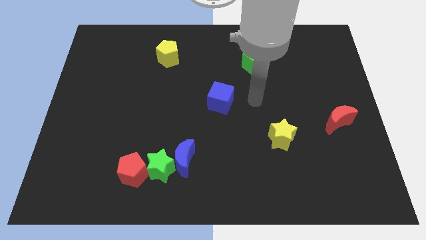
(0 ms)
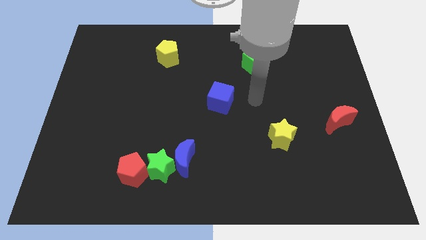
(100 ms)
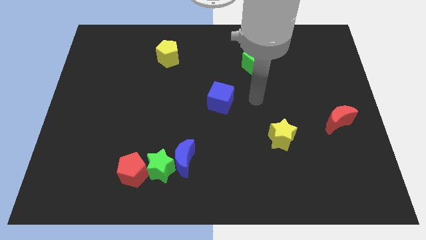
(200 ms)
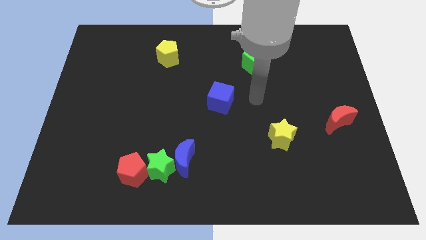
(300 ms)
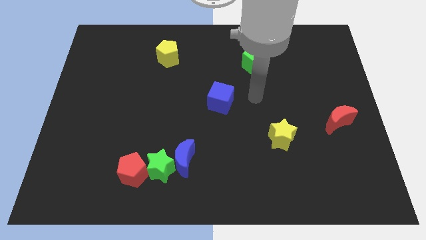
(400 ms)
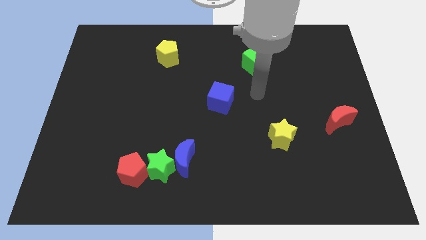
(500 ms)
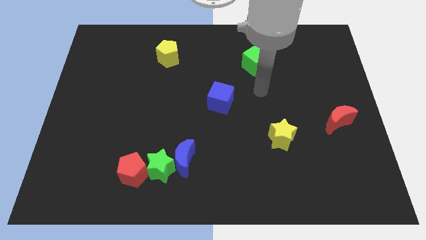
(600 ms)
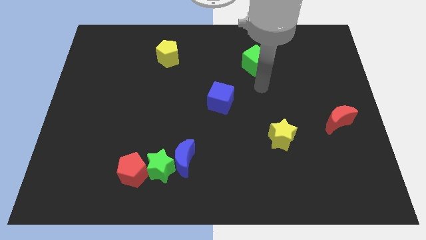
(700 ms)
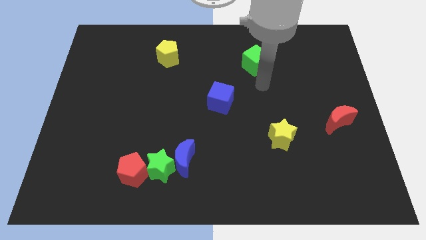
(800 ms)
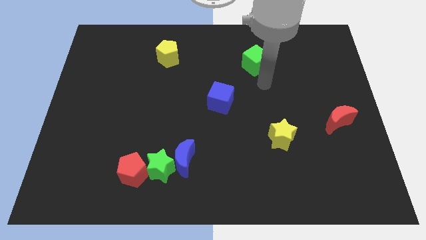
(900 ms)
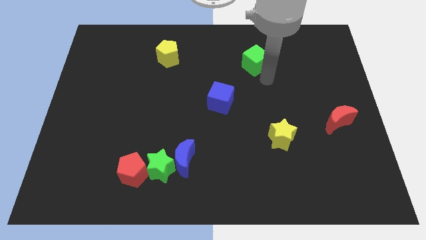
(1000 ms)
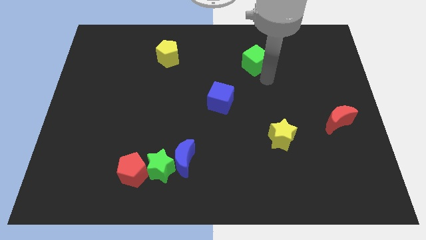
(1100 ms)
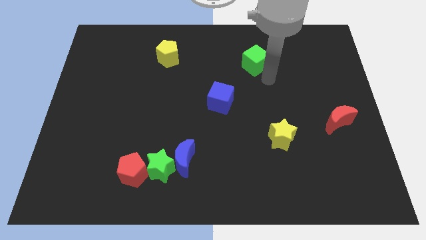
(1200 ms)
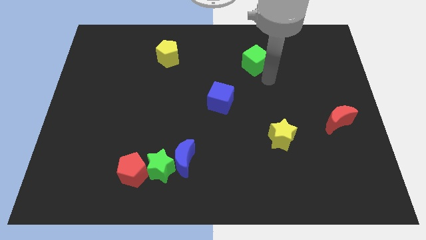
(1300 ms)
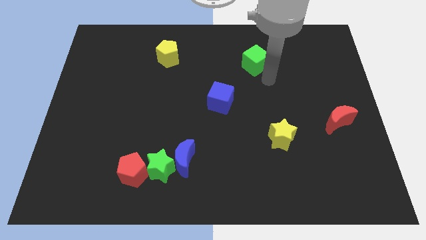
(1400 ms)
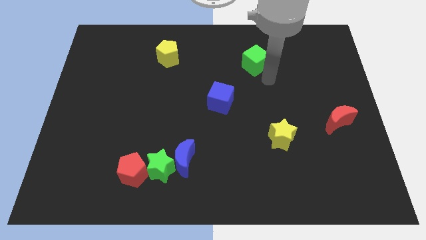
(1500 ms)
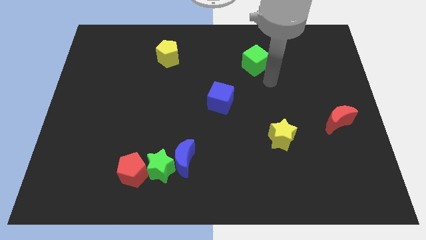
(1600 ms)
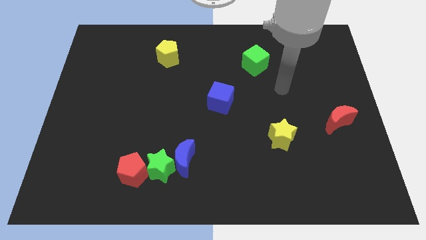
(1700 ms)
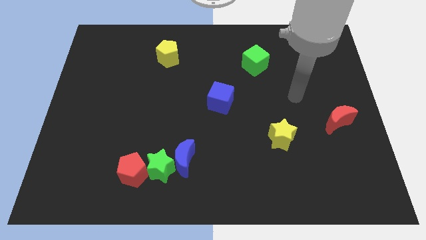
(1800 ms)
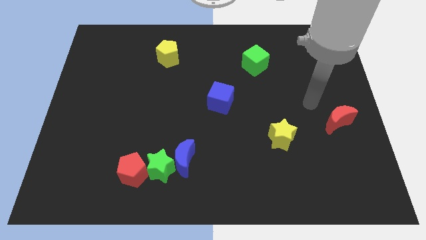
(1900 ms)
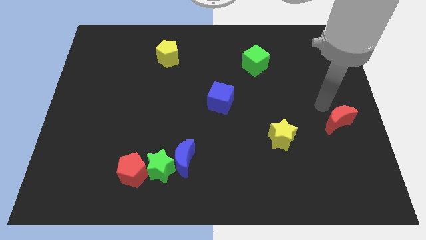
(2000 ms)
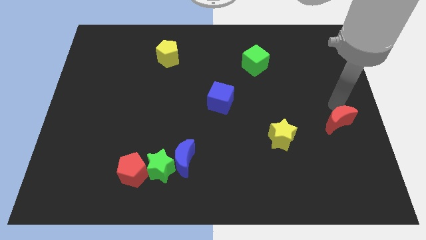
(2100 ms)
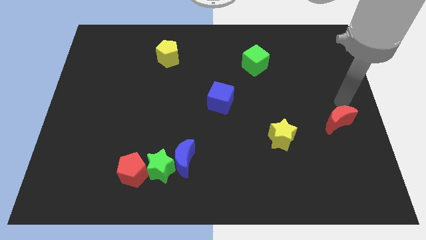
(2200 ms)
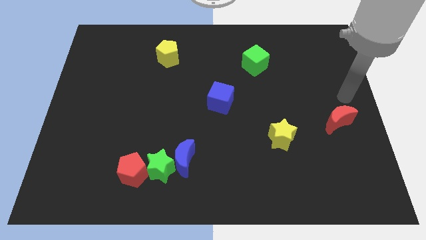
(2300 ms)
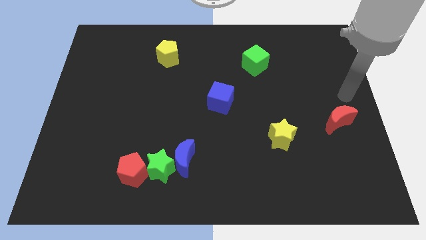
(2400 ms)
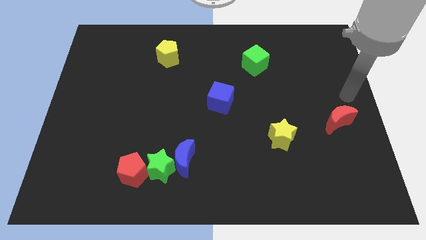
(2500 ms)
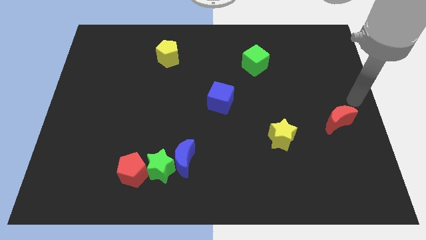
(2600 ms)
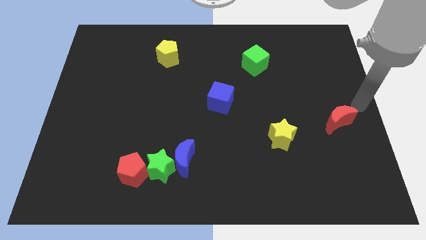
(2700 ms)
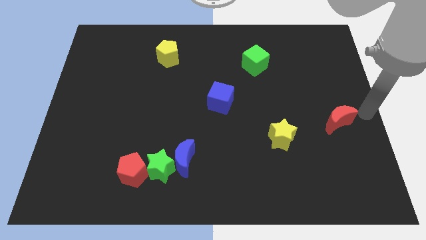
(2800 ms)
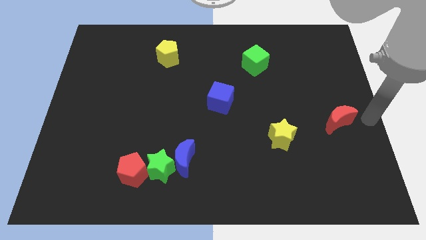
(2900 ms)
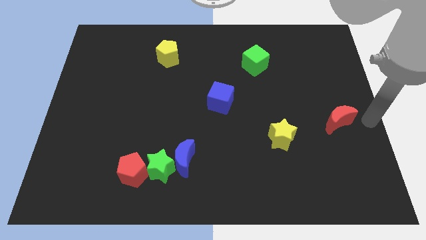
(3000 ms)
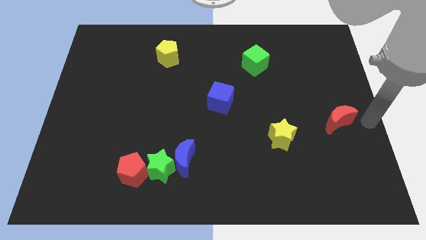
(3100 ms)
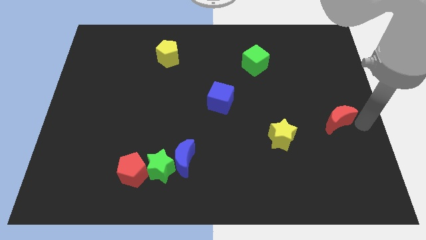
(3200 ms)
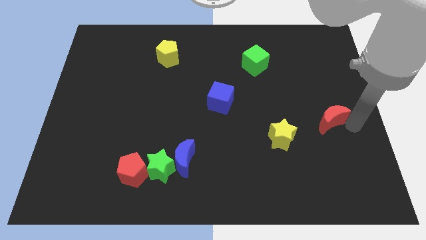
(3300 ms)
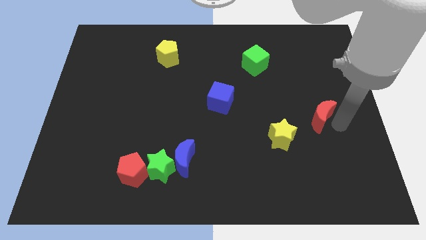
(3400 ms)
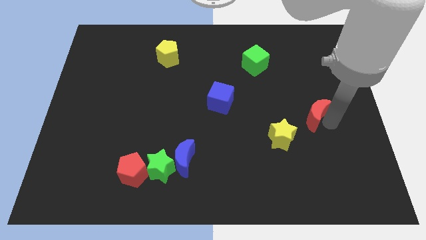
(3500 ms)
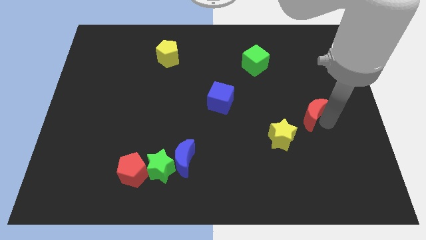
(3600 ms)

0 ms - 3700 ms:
place the red moon diagonal to yellow star

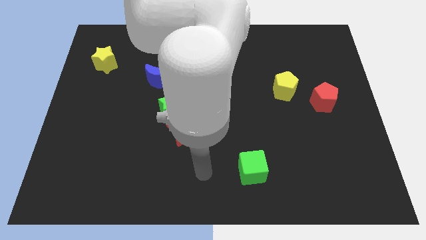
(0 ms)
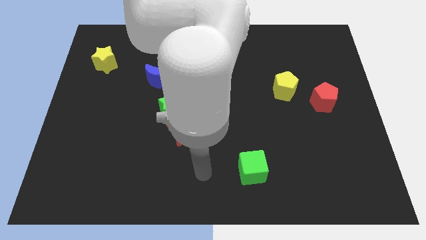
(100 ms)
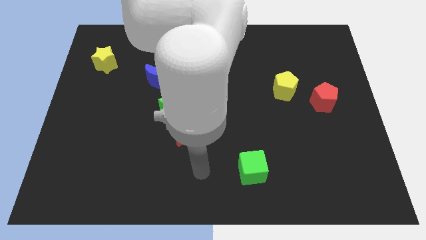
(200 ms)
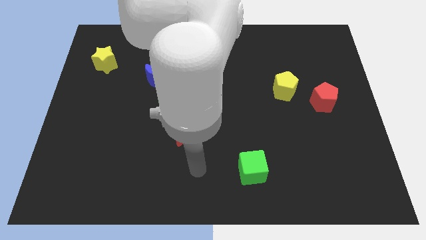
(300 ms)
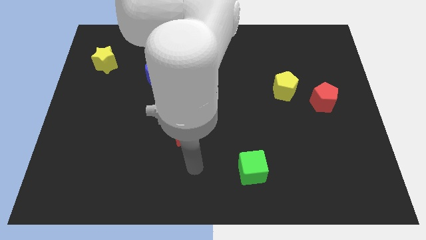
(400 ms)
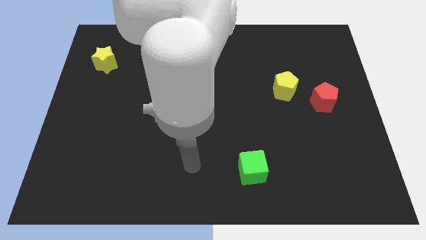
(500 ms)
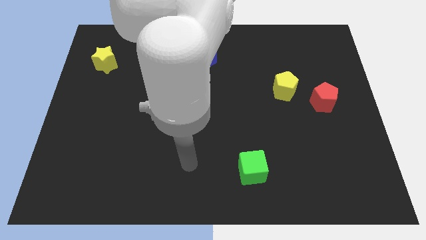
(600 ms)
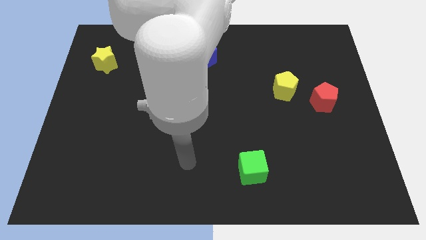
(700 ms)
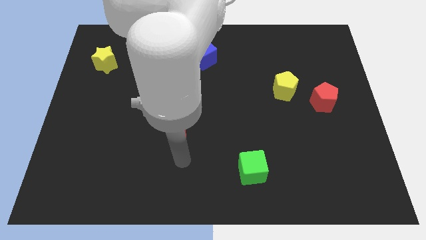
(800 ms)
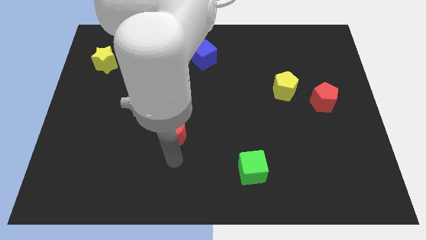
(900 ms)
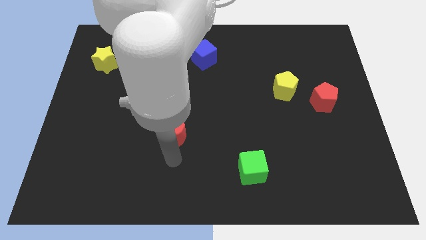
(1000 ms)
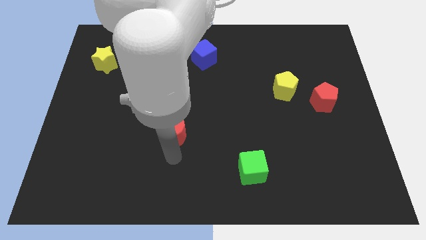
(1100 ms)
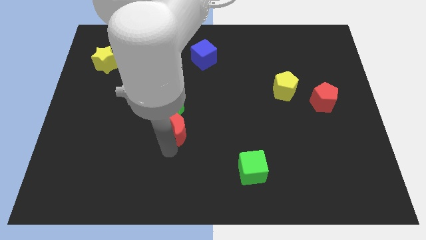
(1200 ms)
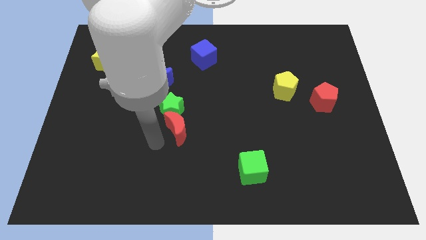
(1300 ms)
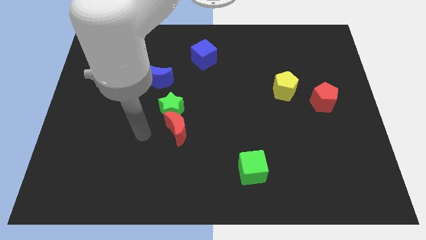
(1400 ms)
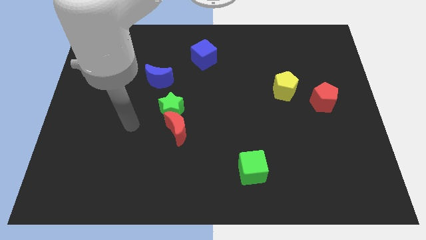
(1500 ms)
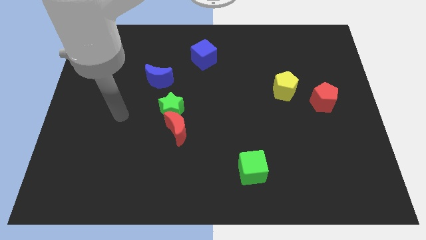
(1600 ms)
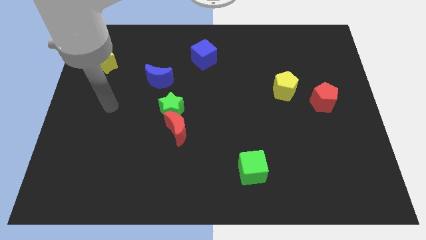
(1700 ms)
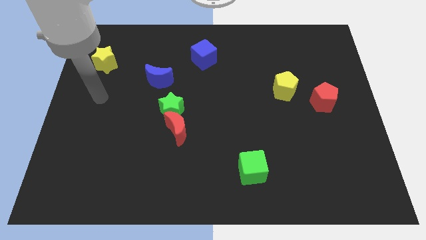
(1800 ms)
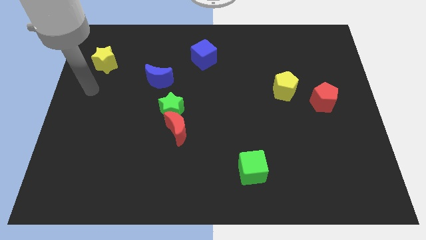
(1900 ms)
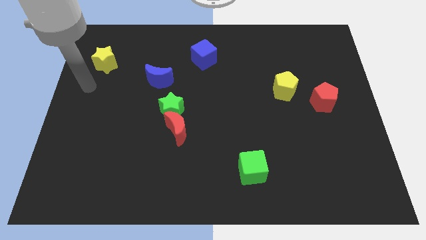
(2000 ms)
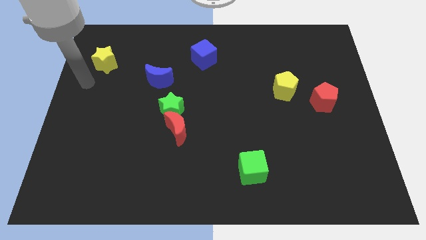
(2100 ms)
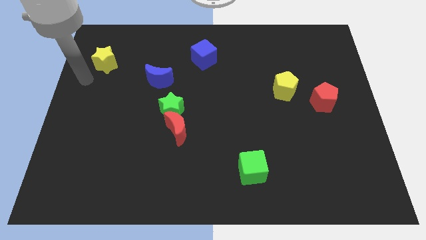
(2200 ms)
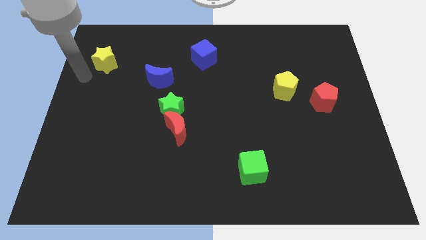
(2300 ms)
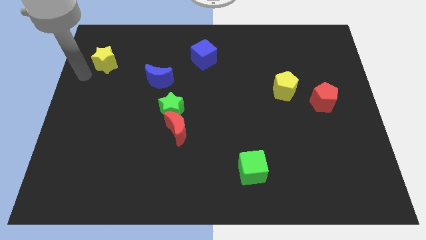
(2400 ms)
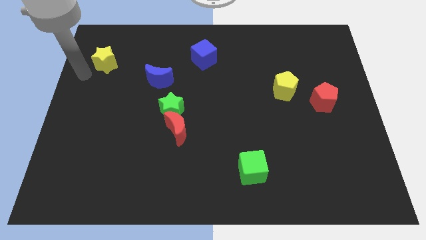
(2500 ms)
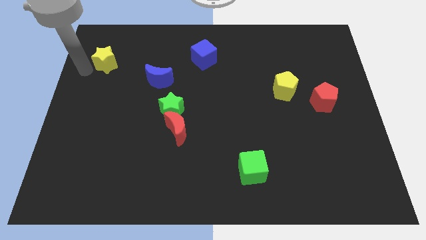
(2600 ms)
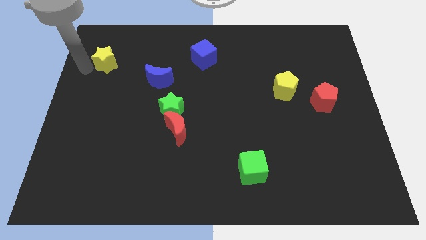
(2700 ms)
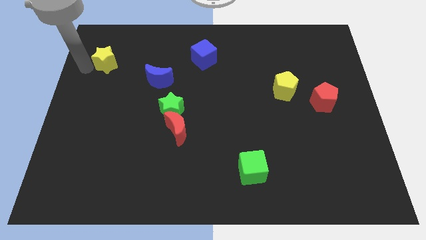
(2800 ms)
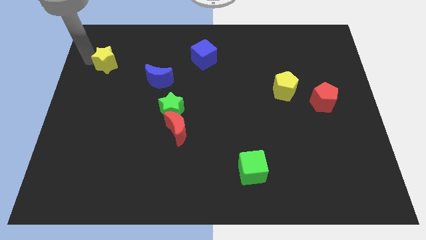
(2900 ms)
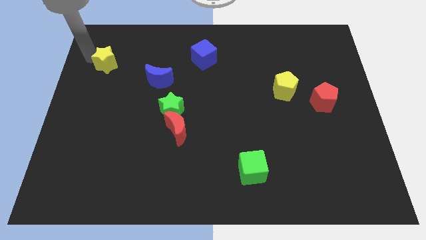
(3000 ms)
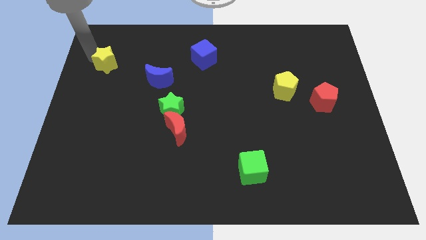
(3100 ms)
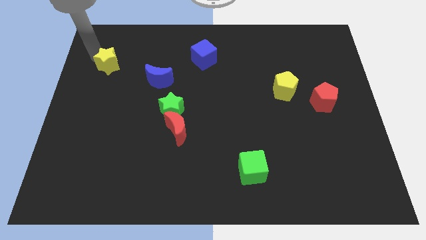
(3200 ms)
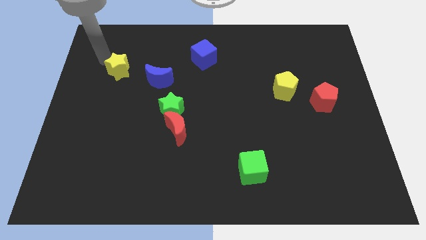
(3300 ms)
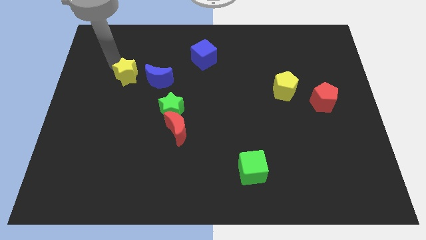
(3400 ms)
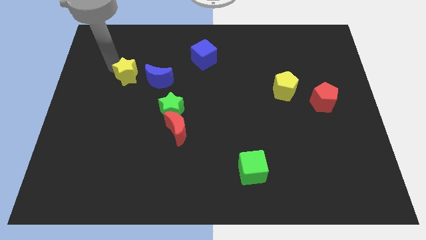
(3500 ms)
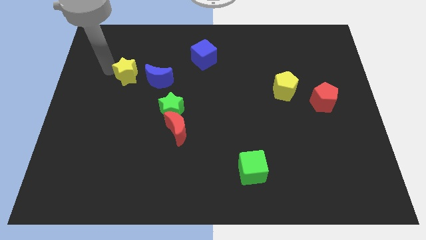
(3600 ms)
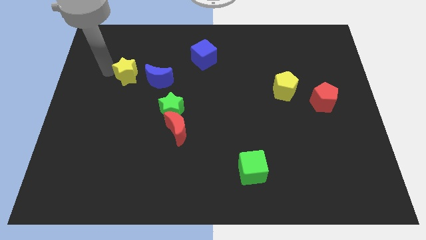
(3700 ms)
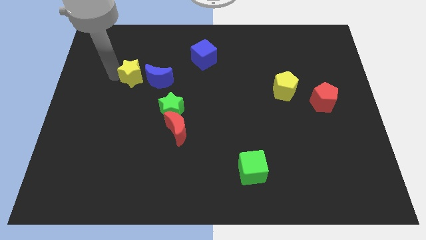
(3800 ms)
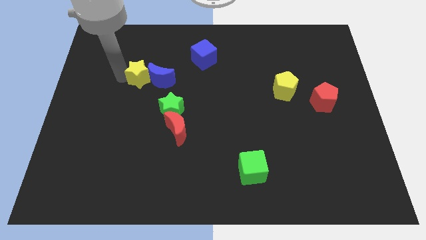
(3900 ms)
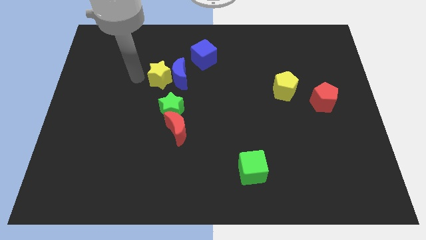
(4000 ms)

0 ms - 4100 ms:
push the yellow star into the blue crescent

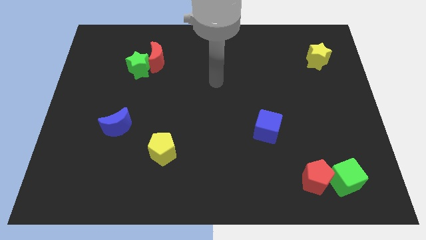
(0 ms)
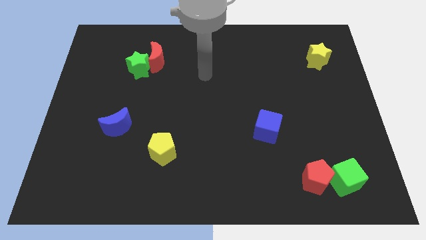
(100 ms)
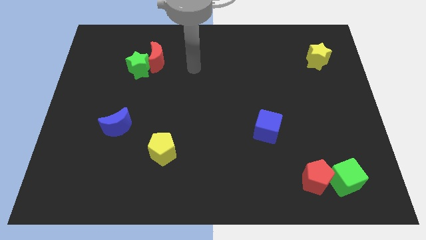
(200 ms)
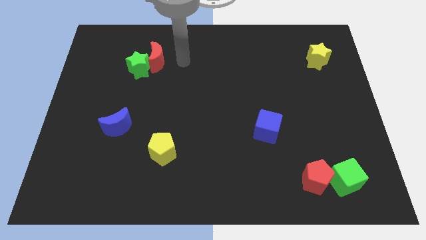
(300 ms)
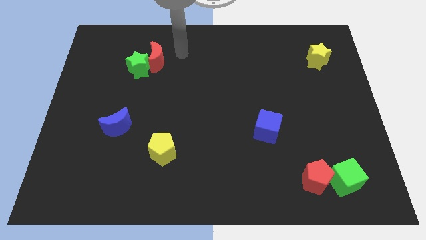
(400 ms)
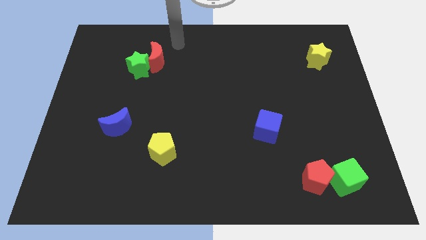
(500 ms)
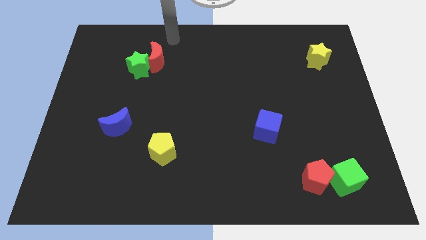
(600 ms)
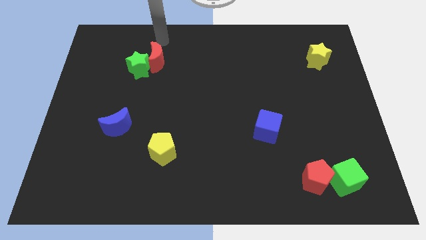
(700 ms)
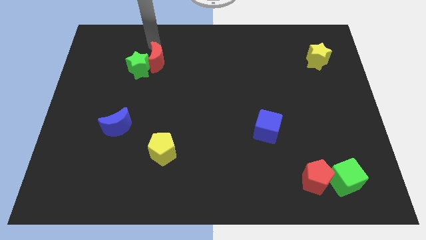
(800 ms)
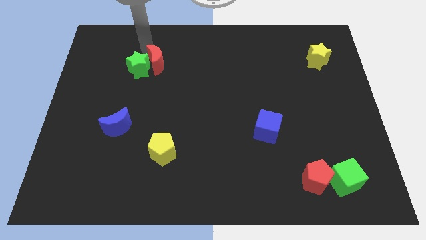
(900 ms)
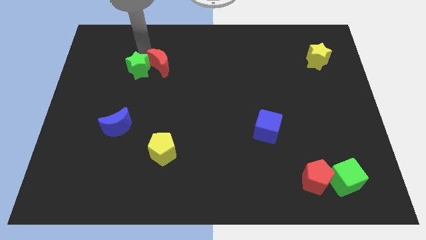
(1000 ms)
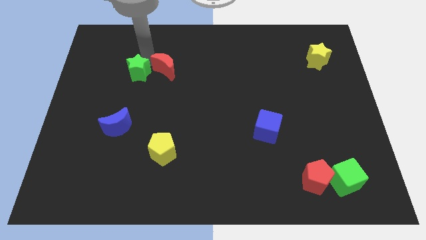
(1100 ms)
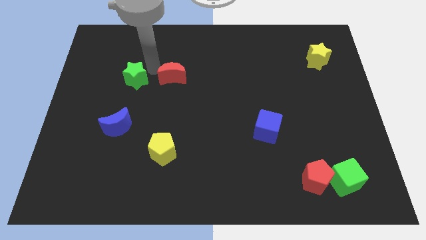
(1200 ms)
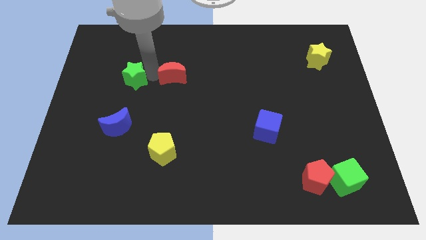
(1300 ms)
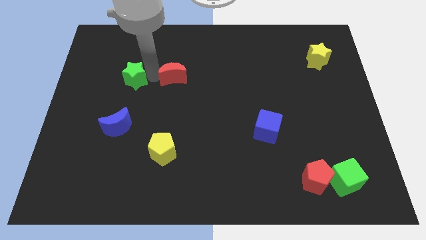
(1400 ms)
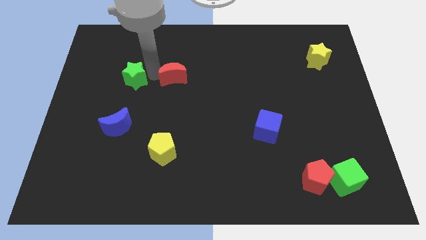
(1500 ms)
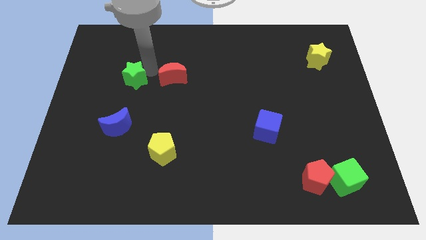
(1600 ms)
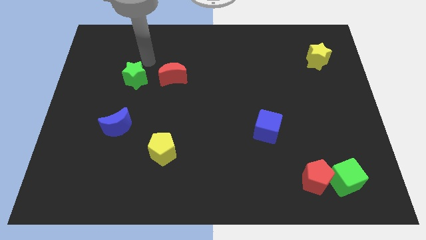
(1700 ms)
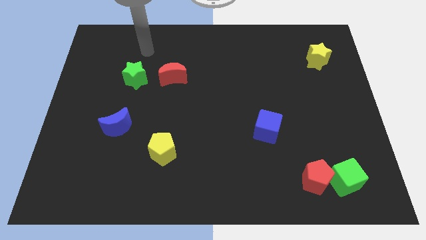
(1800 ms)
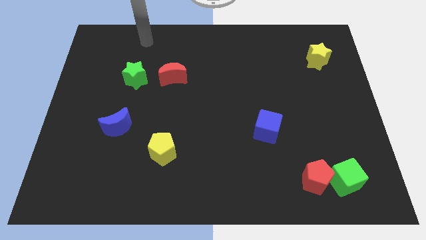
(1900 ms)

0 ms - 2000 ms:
separate red moon from the green star
